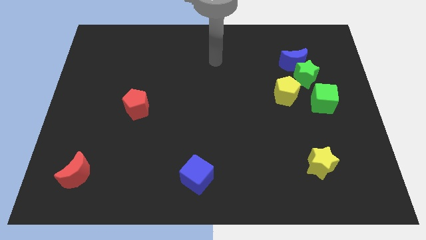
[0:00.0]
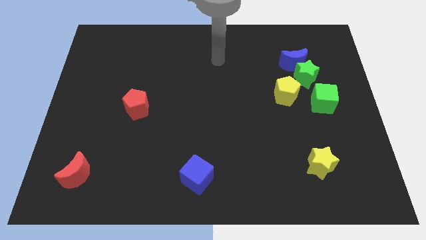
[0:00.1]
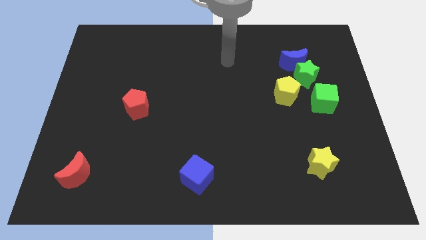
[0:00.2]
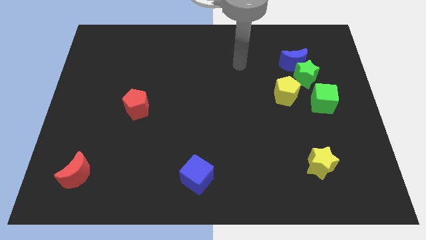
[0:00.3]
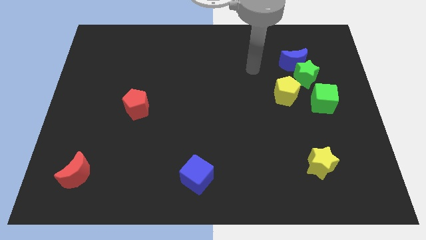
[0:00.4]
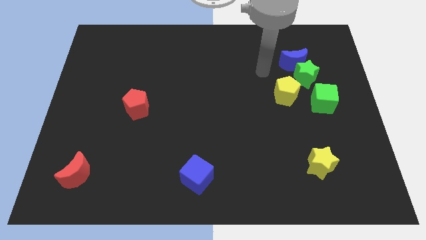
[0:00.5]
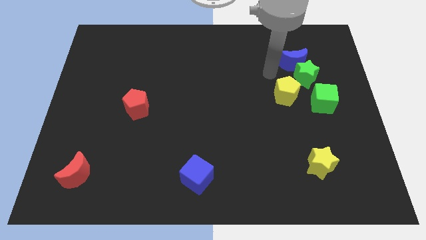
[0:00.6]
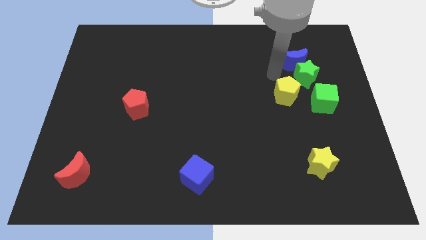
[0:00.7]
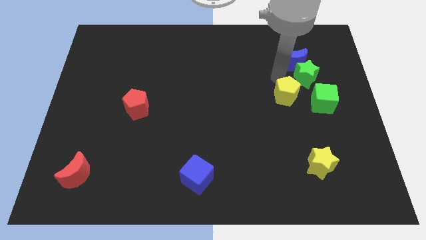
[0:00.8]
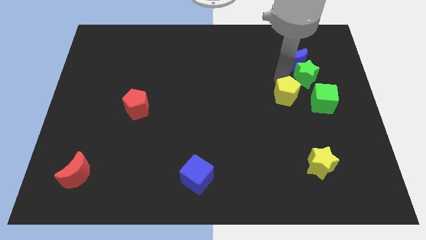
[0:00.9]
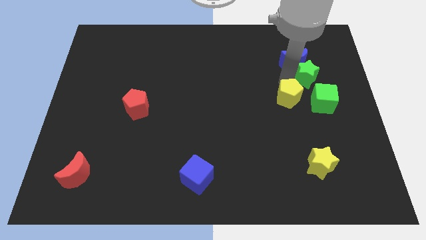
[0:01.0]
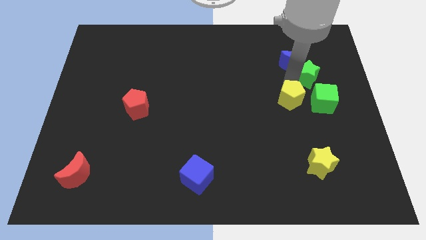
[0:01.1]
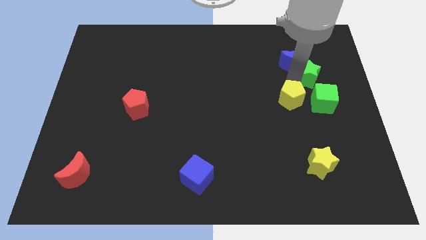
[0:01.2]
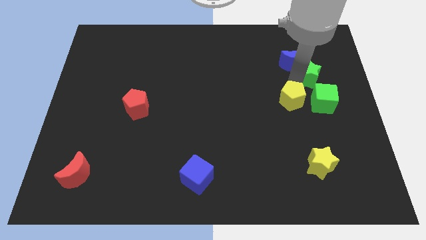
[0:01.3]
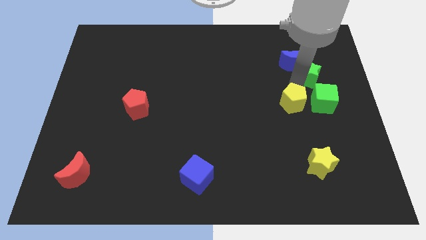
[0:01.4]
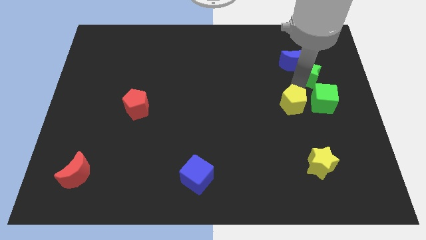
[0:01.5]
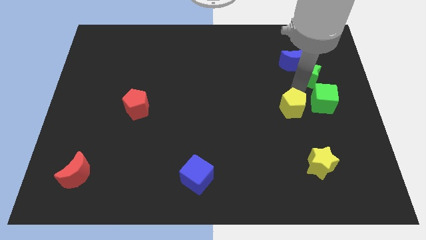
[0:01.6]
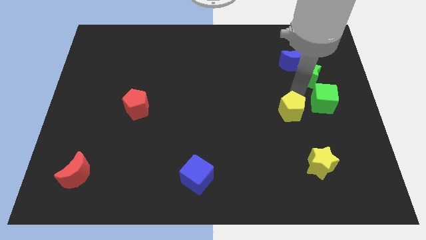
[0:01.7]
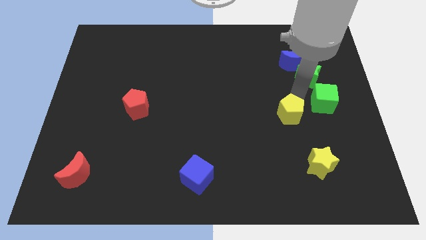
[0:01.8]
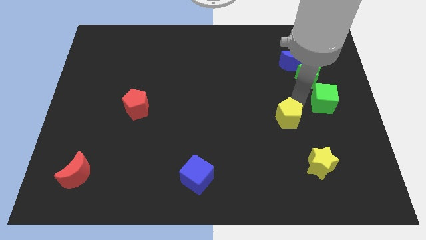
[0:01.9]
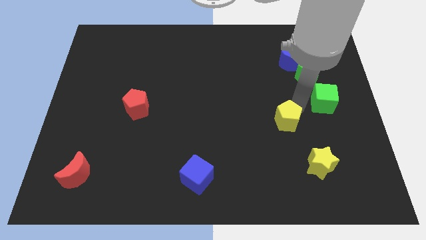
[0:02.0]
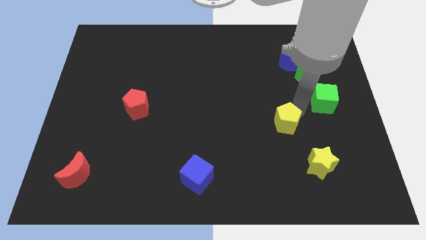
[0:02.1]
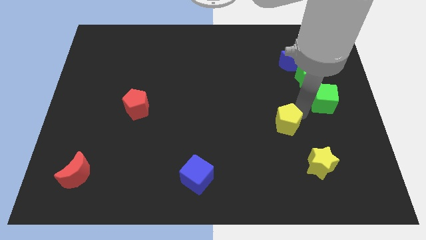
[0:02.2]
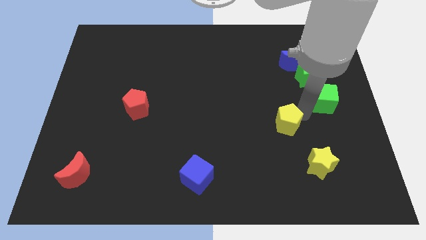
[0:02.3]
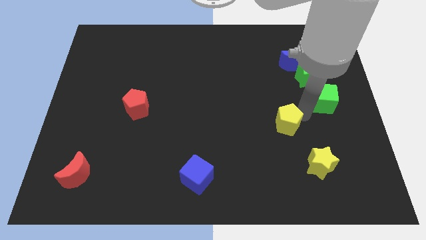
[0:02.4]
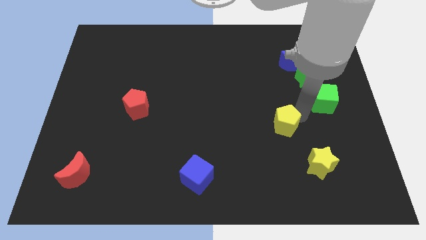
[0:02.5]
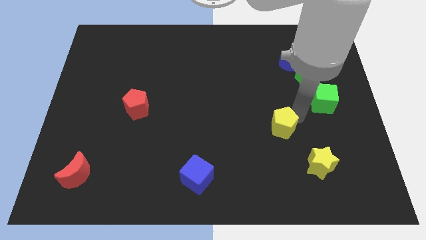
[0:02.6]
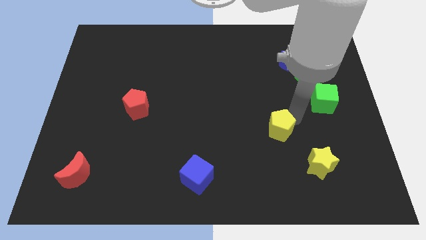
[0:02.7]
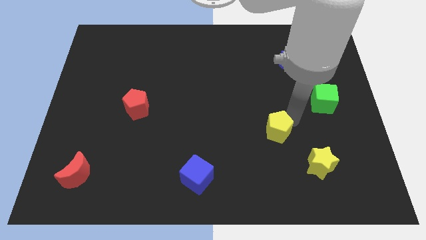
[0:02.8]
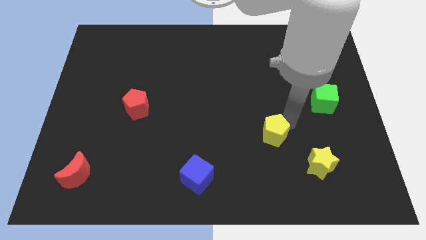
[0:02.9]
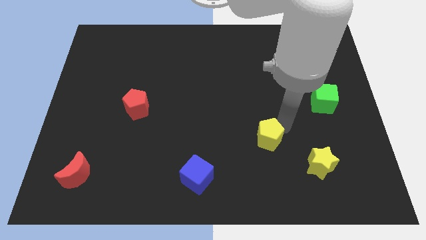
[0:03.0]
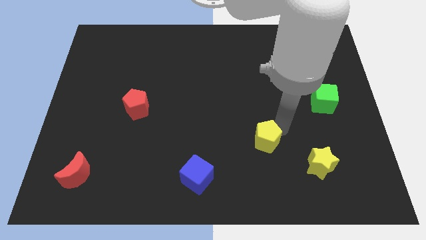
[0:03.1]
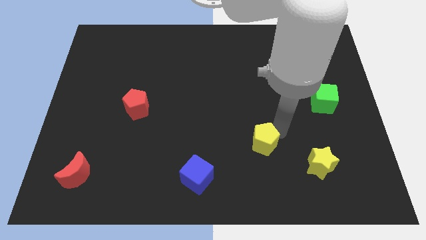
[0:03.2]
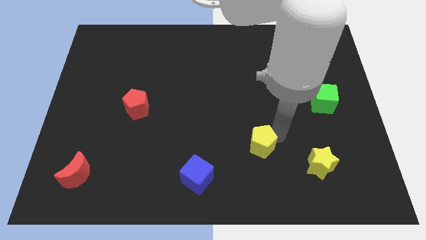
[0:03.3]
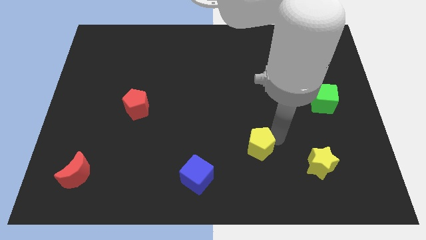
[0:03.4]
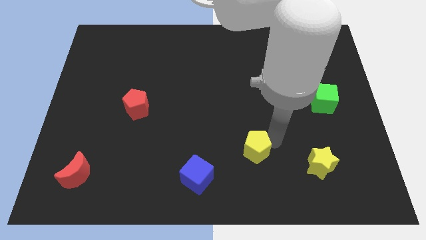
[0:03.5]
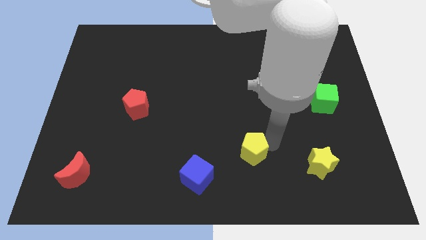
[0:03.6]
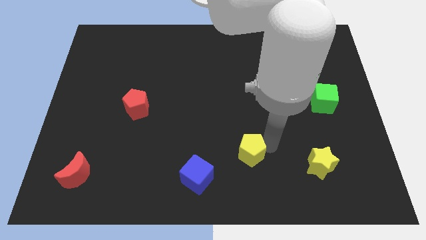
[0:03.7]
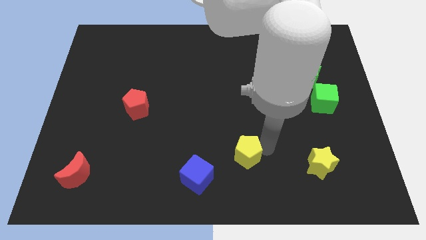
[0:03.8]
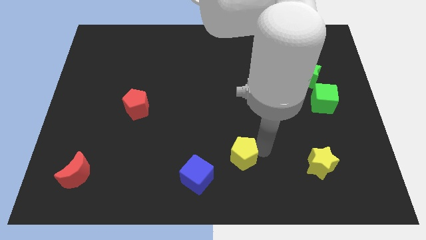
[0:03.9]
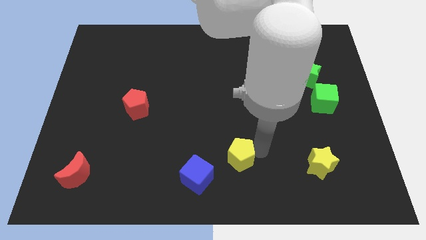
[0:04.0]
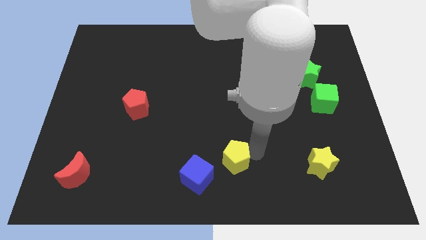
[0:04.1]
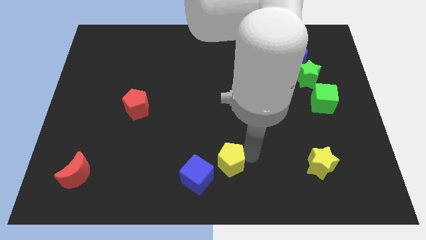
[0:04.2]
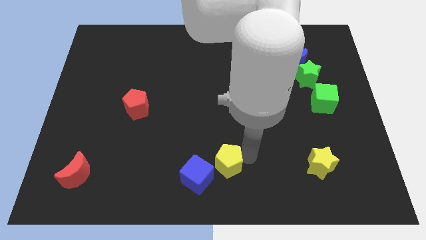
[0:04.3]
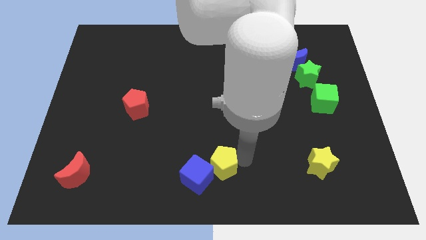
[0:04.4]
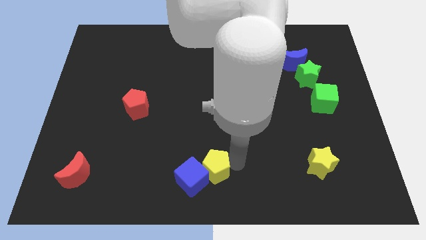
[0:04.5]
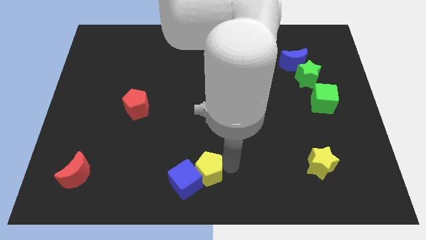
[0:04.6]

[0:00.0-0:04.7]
slide the yellow pentagon to the blue cube

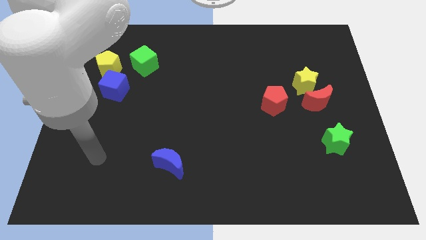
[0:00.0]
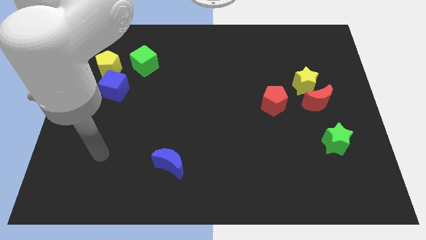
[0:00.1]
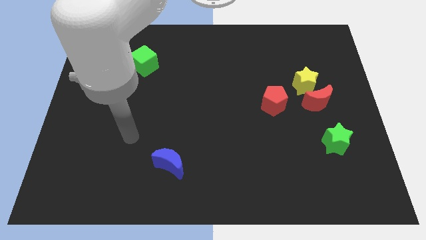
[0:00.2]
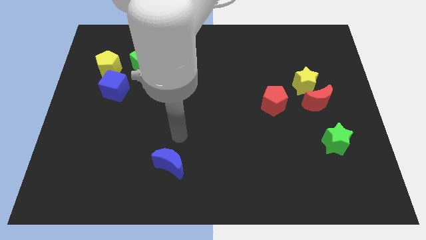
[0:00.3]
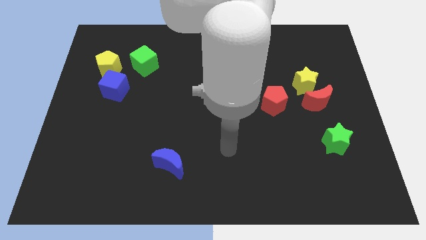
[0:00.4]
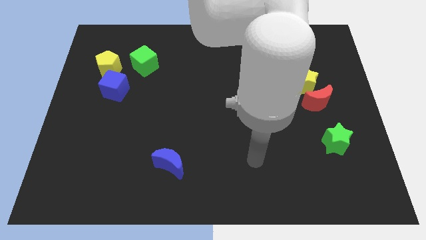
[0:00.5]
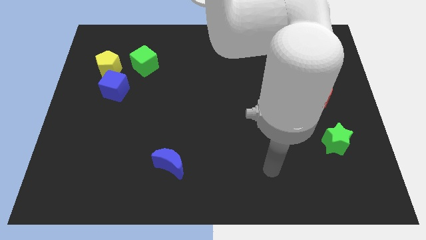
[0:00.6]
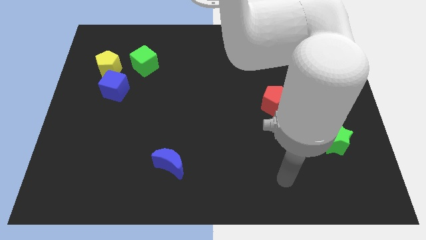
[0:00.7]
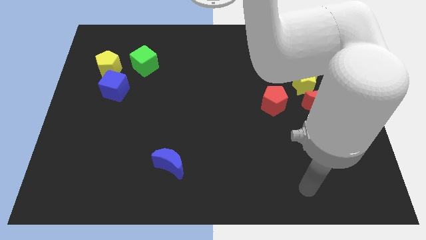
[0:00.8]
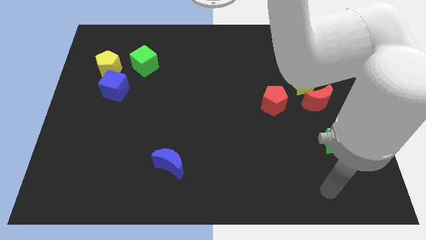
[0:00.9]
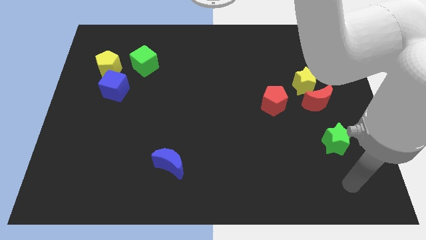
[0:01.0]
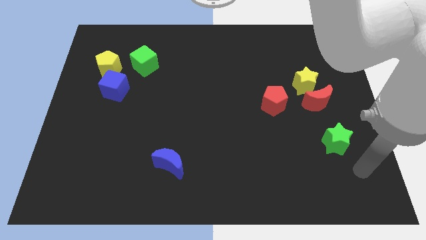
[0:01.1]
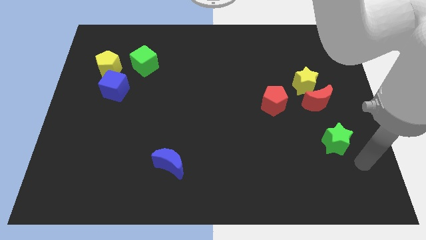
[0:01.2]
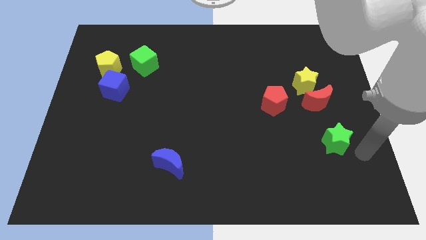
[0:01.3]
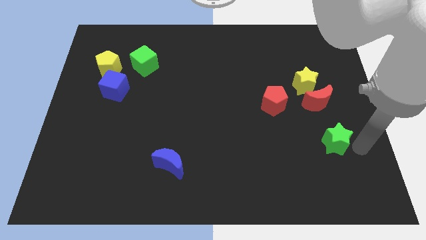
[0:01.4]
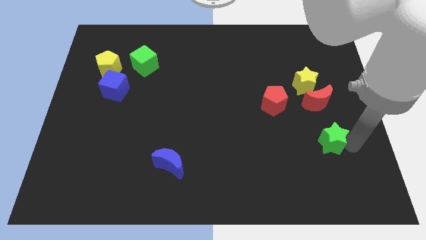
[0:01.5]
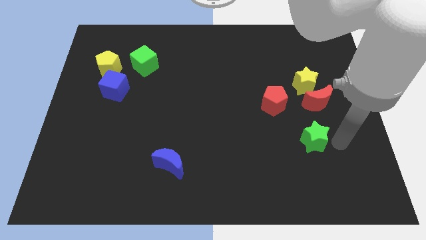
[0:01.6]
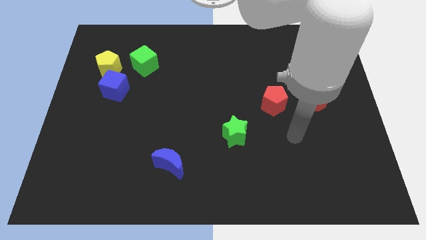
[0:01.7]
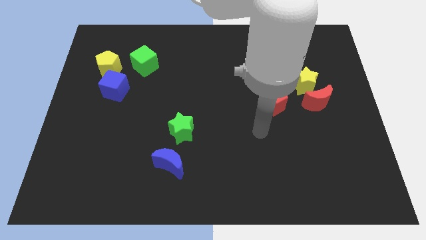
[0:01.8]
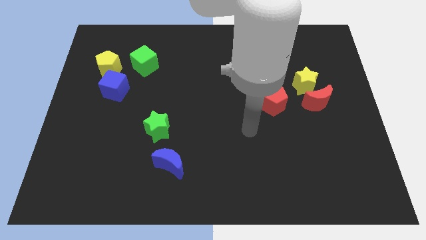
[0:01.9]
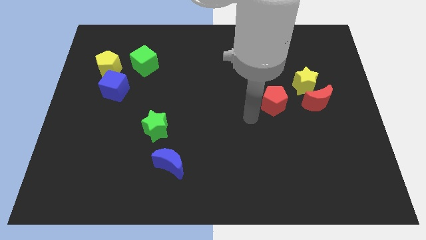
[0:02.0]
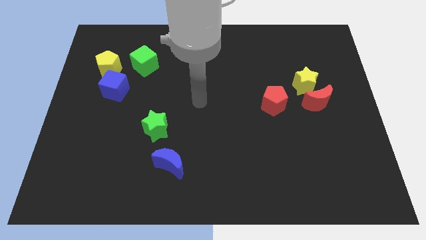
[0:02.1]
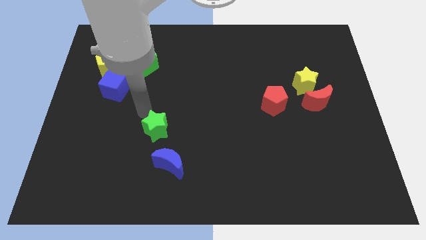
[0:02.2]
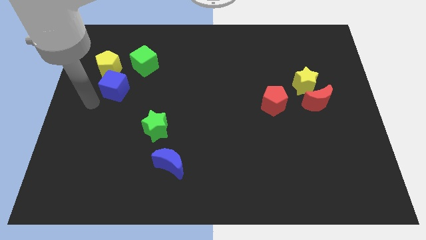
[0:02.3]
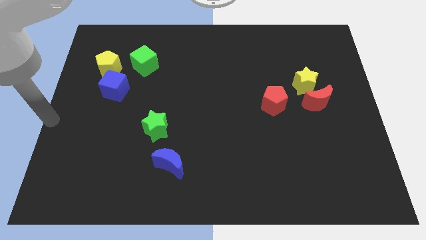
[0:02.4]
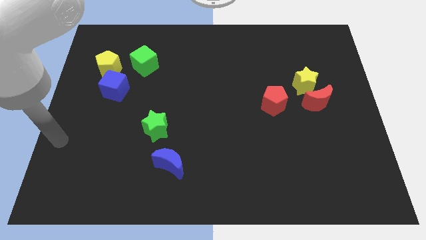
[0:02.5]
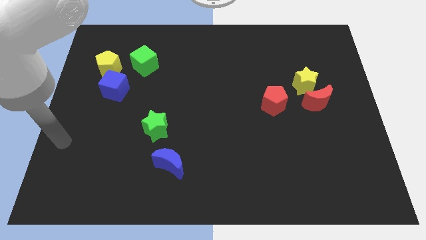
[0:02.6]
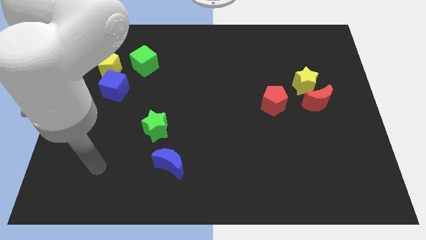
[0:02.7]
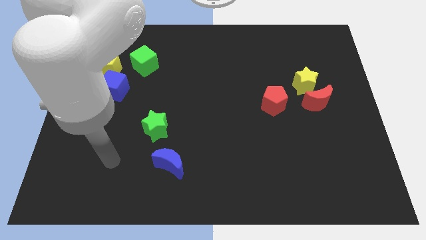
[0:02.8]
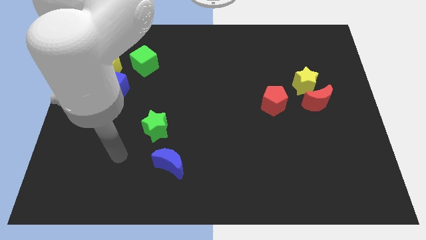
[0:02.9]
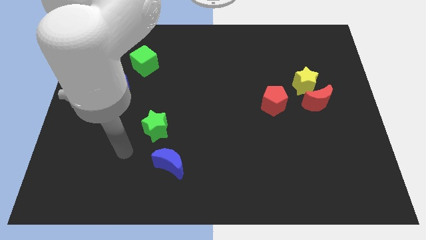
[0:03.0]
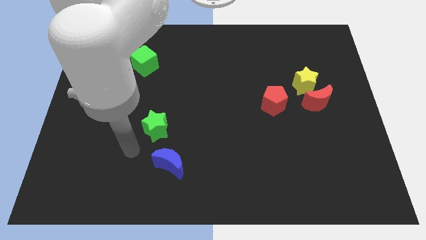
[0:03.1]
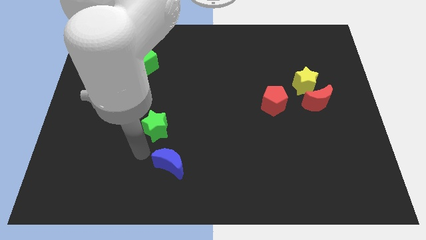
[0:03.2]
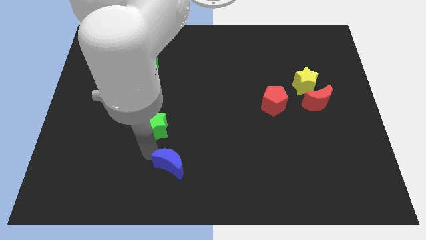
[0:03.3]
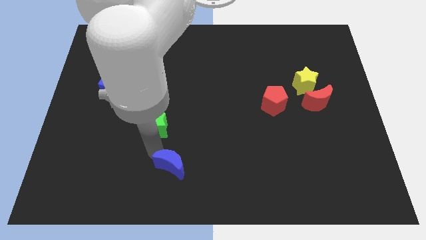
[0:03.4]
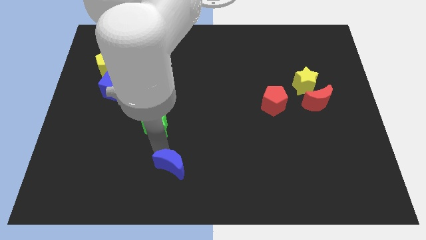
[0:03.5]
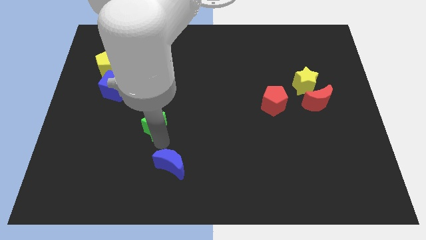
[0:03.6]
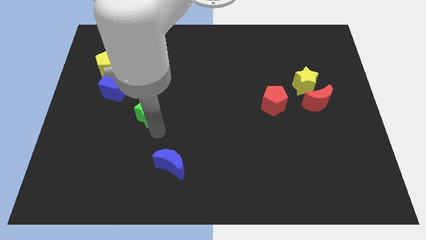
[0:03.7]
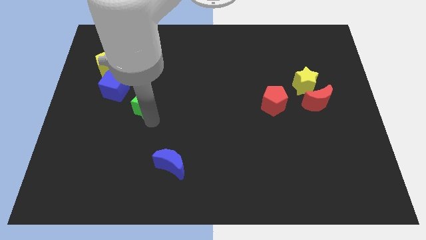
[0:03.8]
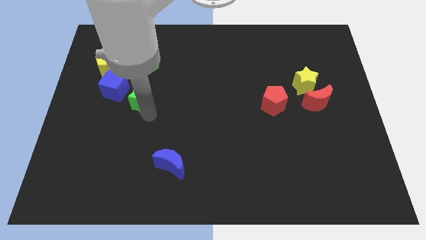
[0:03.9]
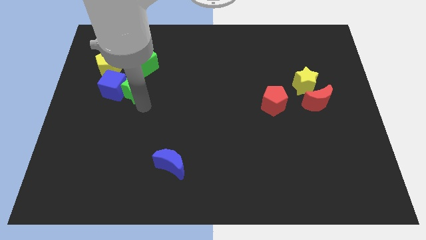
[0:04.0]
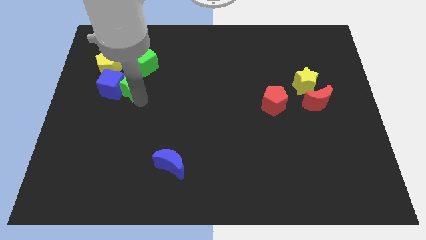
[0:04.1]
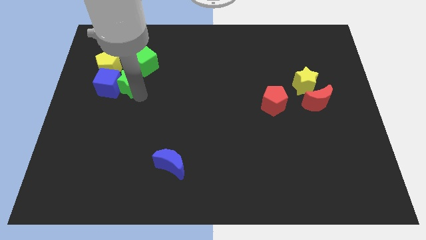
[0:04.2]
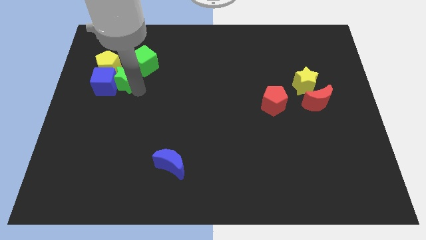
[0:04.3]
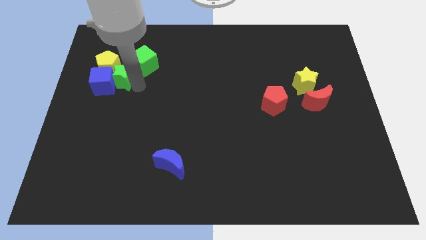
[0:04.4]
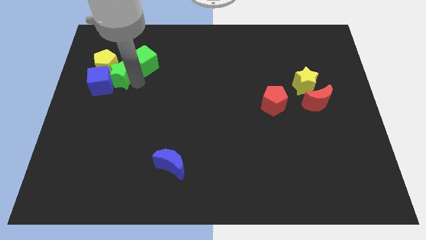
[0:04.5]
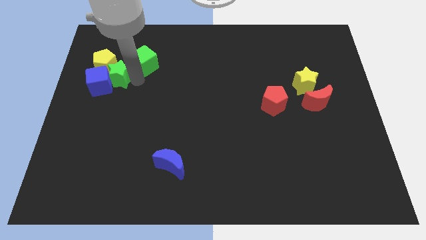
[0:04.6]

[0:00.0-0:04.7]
put the green star towards the yellow pentagon
